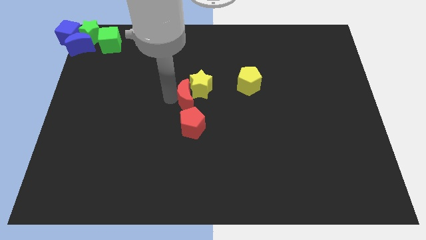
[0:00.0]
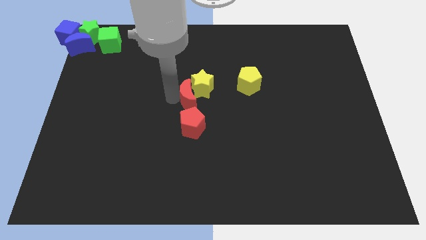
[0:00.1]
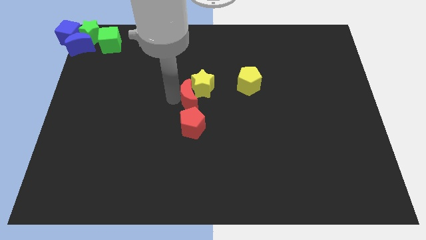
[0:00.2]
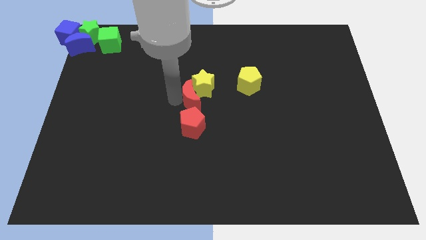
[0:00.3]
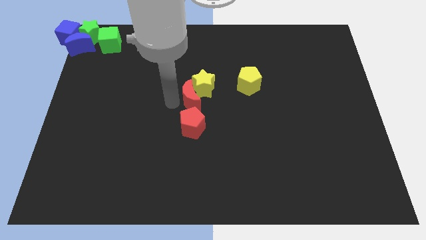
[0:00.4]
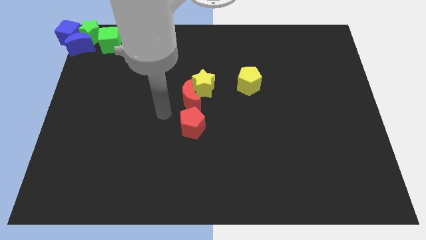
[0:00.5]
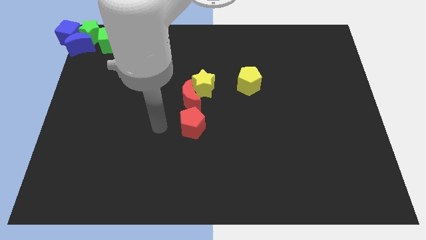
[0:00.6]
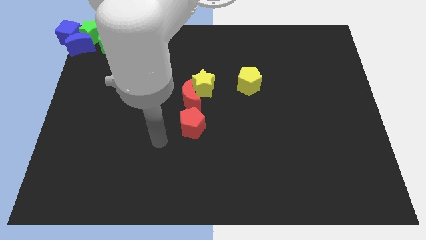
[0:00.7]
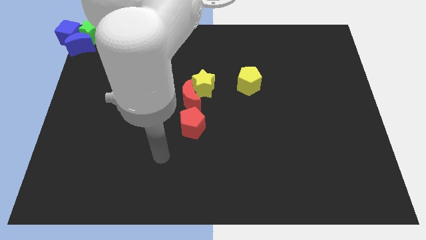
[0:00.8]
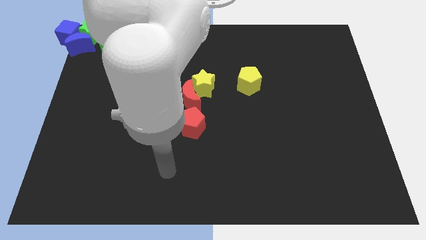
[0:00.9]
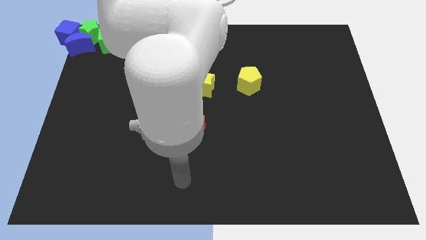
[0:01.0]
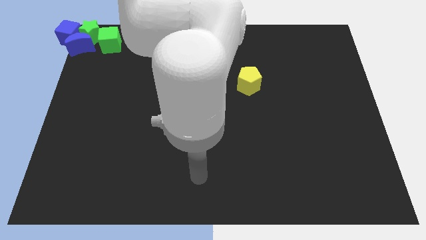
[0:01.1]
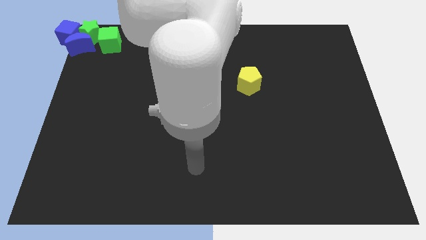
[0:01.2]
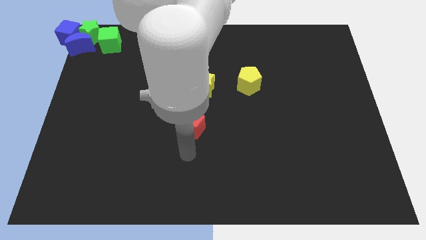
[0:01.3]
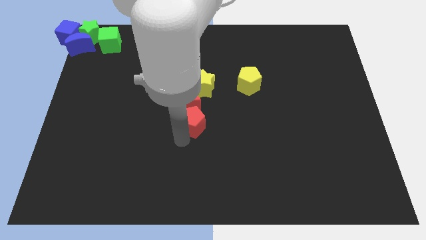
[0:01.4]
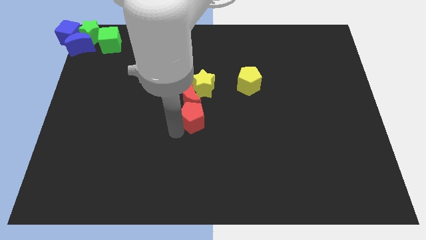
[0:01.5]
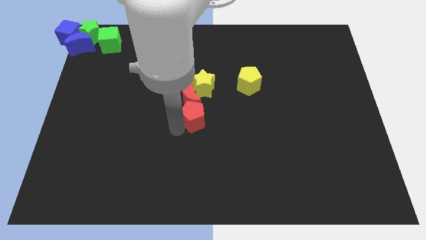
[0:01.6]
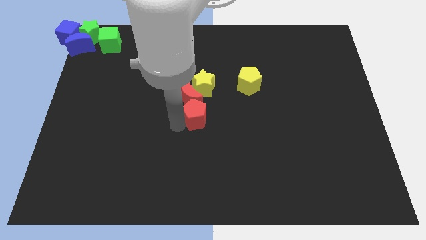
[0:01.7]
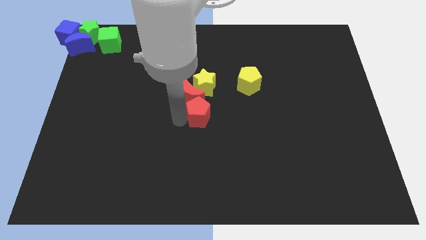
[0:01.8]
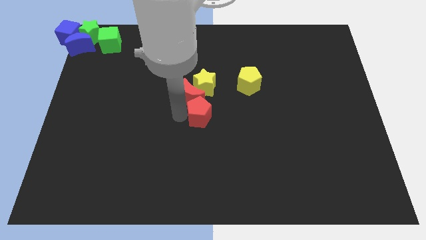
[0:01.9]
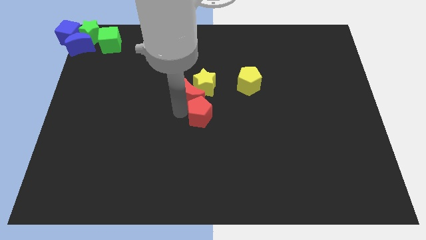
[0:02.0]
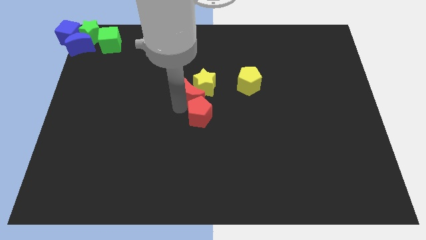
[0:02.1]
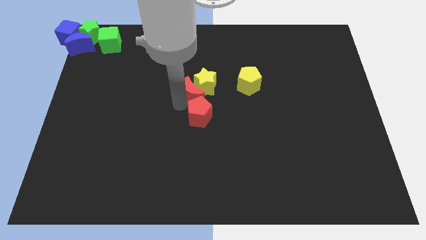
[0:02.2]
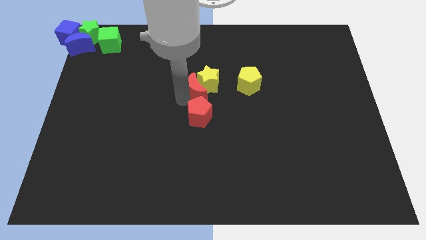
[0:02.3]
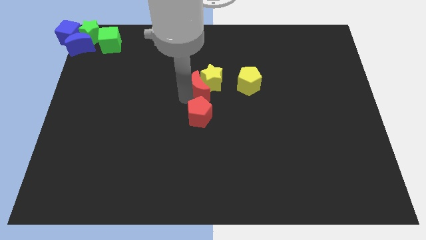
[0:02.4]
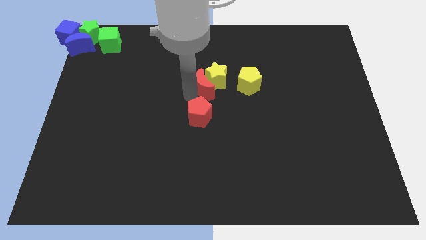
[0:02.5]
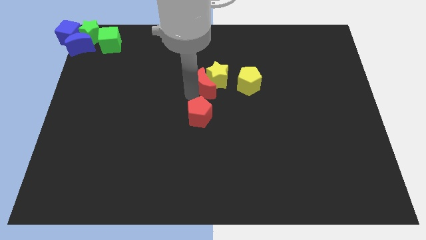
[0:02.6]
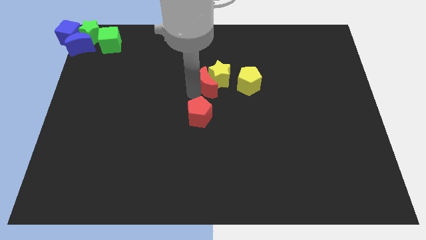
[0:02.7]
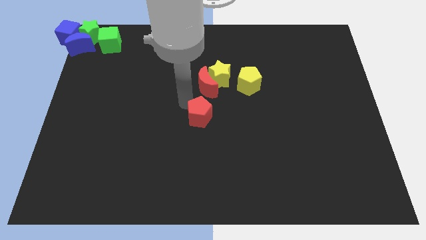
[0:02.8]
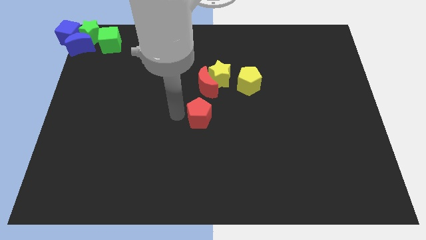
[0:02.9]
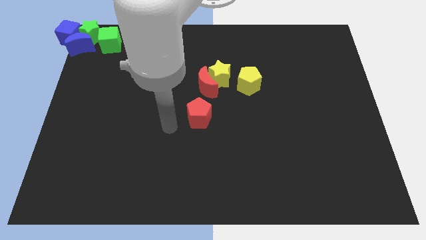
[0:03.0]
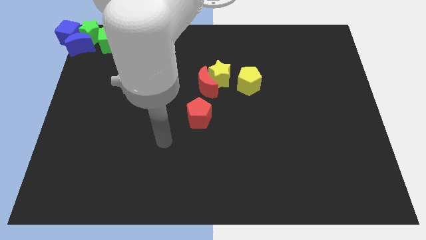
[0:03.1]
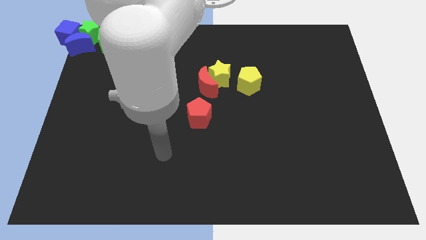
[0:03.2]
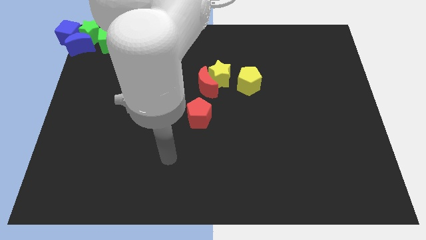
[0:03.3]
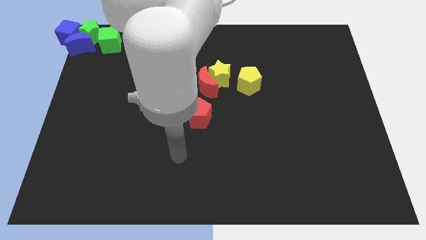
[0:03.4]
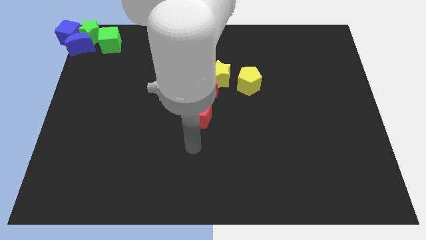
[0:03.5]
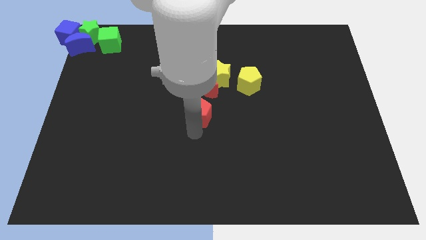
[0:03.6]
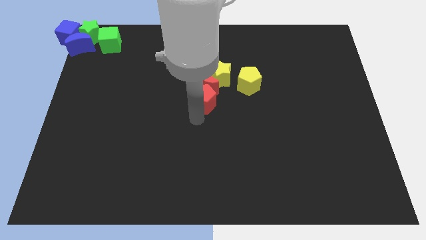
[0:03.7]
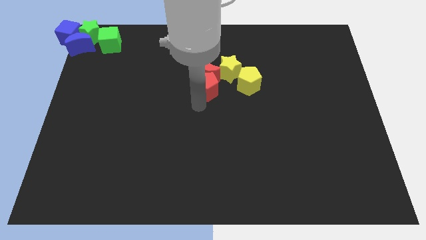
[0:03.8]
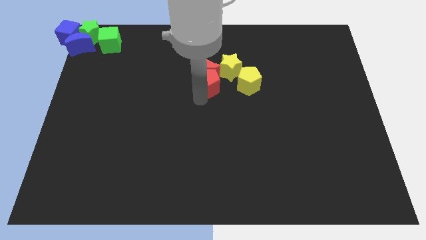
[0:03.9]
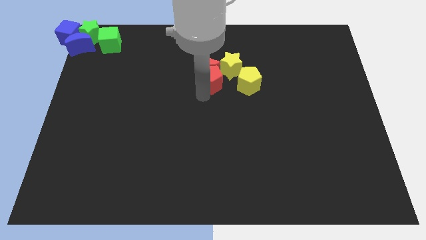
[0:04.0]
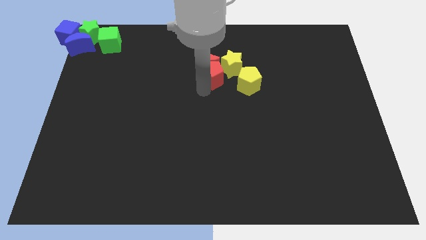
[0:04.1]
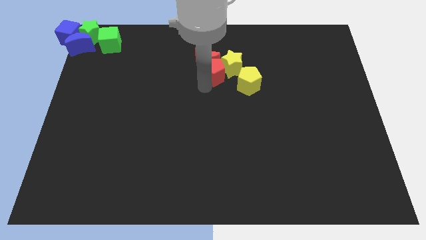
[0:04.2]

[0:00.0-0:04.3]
move the red crescent into the yellow star

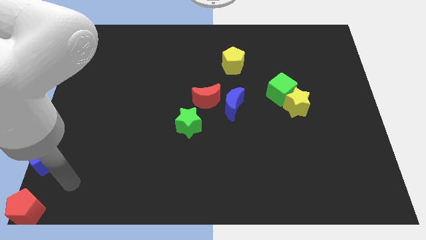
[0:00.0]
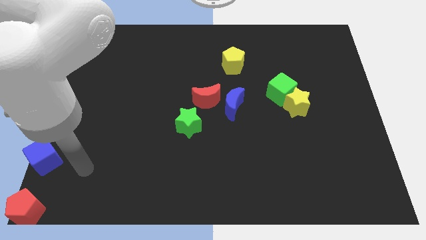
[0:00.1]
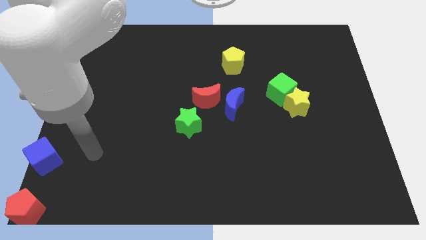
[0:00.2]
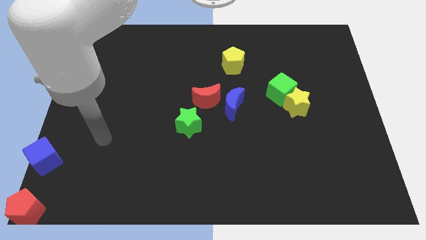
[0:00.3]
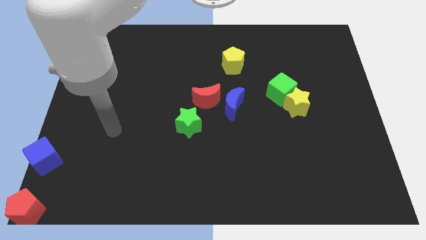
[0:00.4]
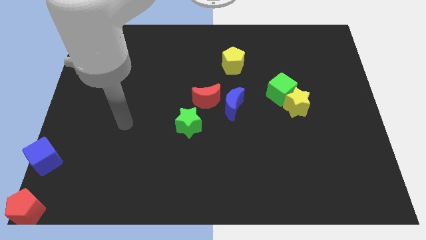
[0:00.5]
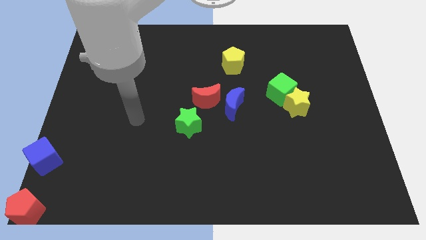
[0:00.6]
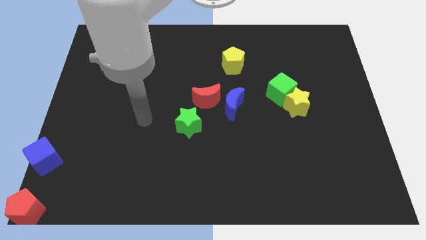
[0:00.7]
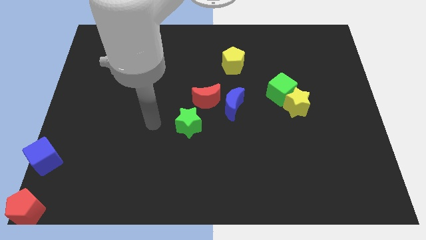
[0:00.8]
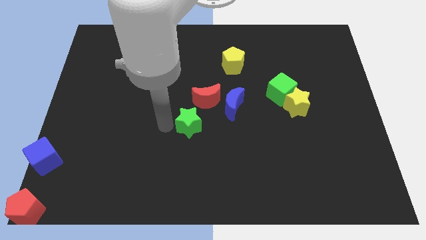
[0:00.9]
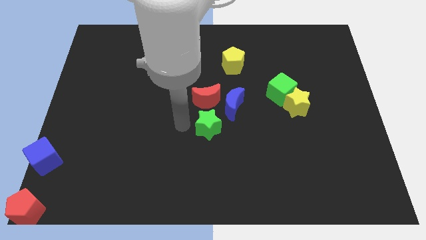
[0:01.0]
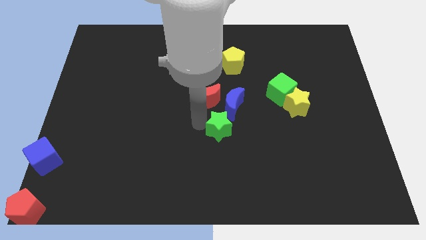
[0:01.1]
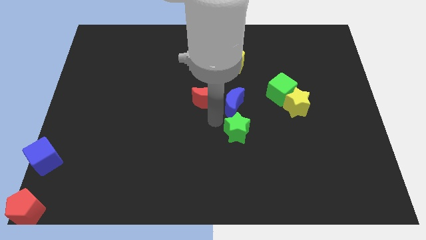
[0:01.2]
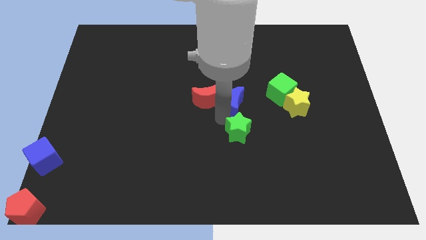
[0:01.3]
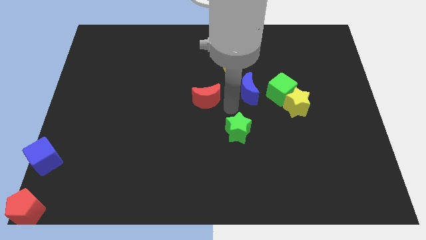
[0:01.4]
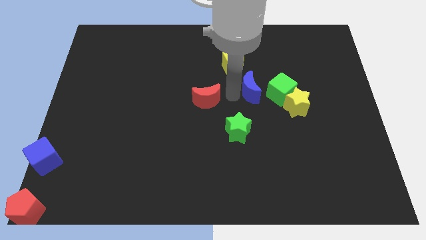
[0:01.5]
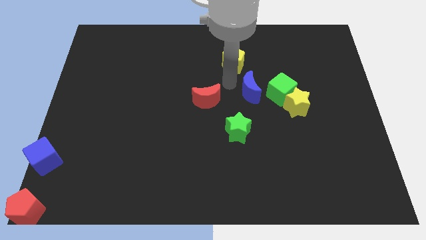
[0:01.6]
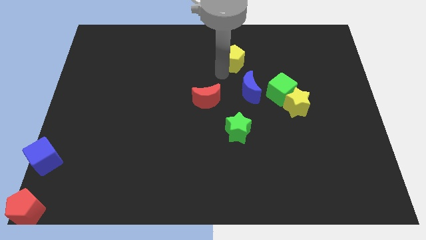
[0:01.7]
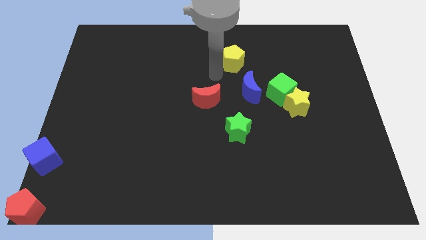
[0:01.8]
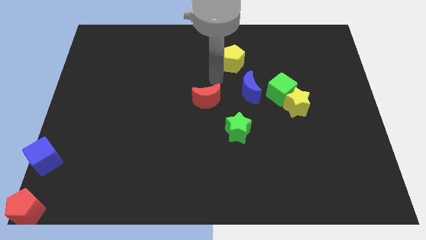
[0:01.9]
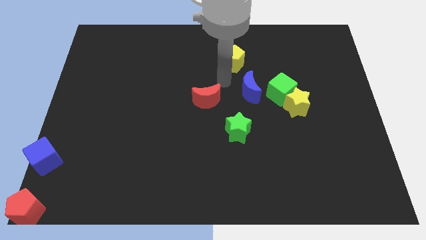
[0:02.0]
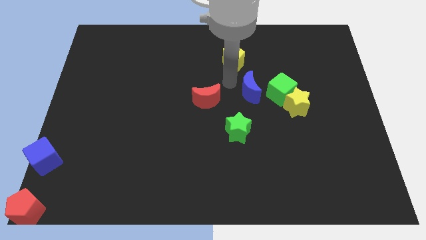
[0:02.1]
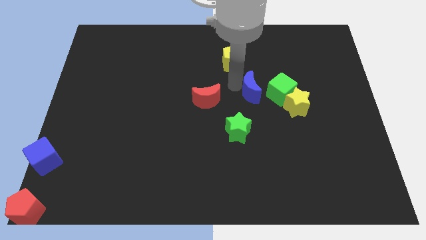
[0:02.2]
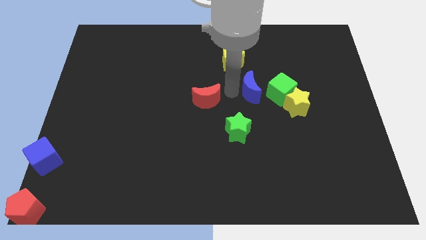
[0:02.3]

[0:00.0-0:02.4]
drag the green star towards right side of the board

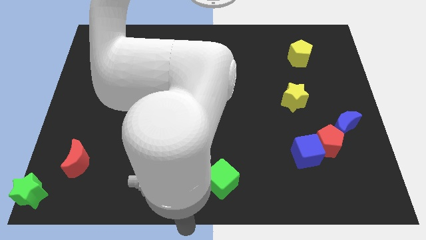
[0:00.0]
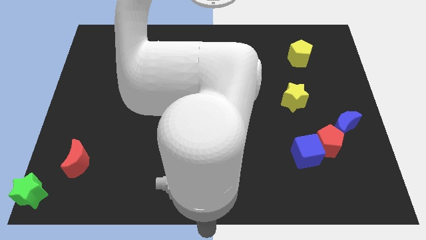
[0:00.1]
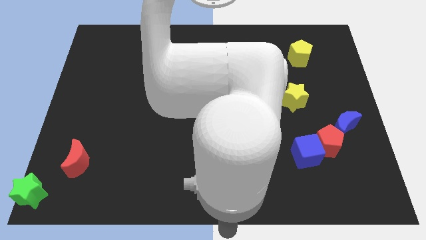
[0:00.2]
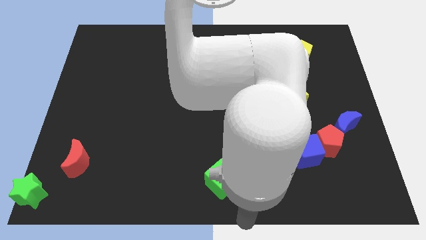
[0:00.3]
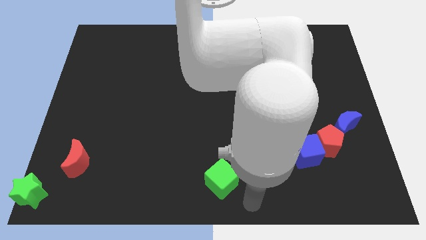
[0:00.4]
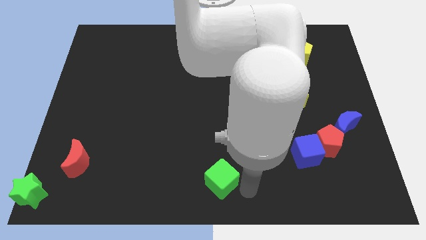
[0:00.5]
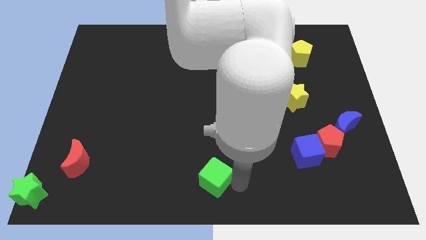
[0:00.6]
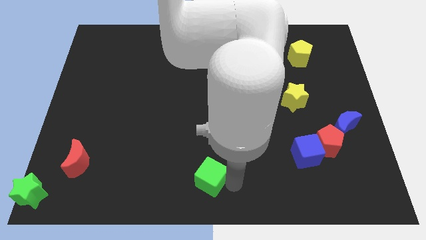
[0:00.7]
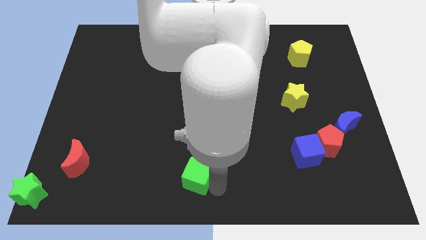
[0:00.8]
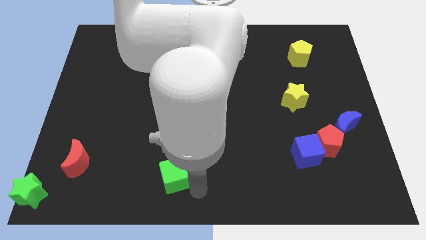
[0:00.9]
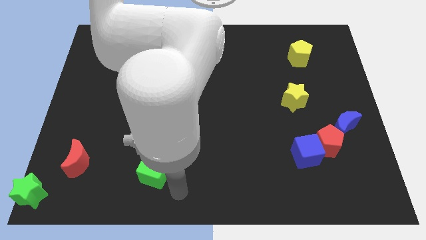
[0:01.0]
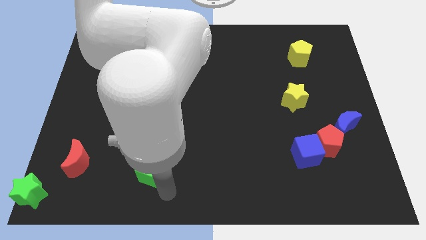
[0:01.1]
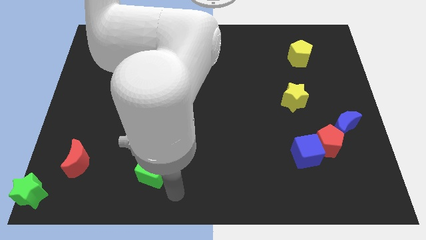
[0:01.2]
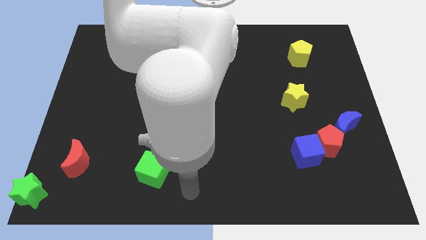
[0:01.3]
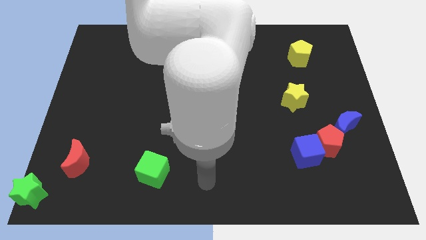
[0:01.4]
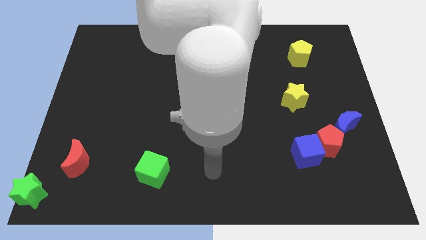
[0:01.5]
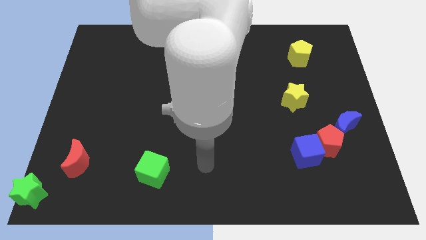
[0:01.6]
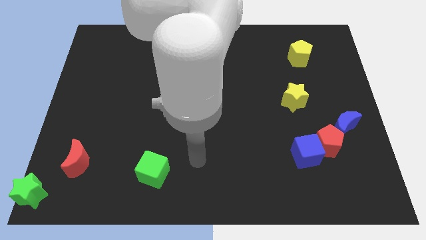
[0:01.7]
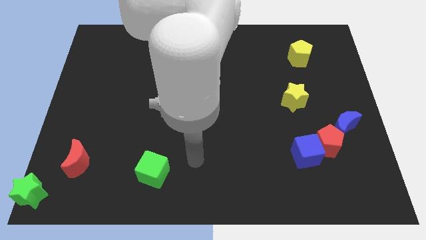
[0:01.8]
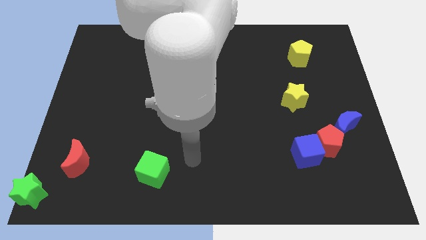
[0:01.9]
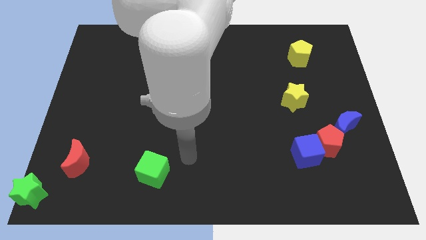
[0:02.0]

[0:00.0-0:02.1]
move the green cube towards the red moon

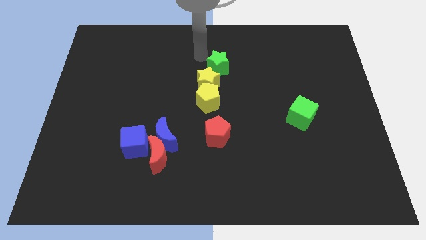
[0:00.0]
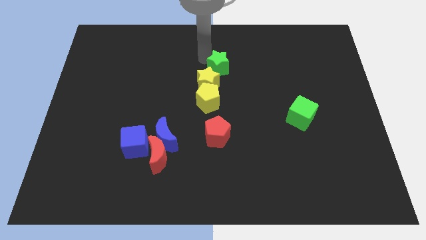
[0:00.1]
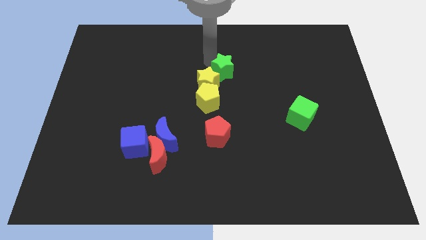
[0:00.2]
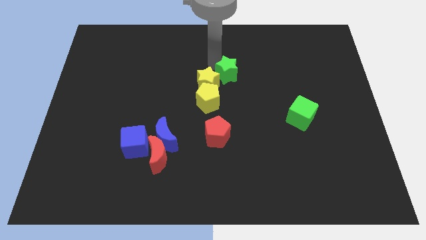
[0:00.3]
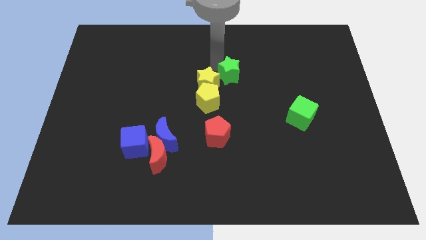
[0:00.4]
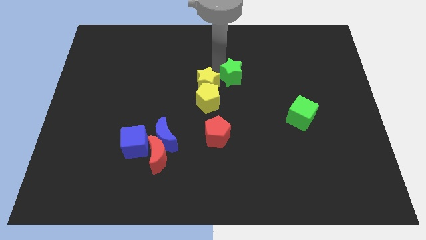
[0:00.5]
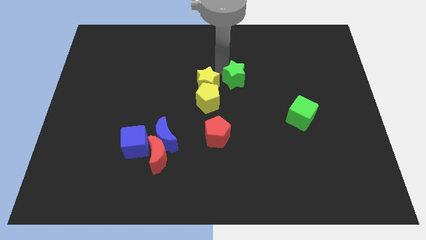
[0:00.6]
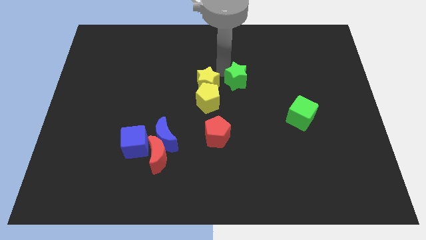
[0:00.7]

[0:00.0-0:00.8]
move the green star top right to the yellow star
